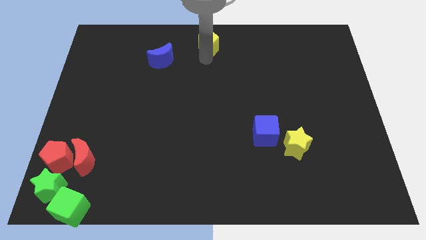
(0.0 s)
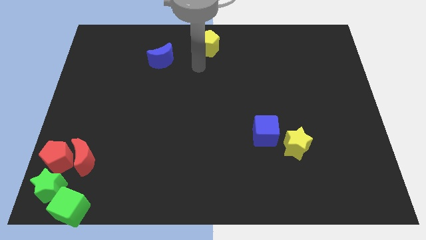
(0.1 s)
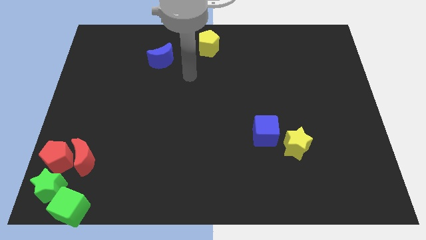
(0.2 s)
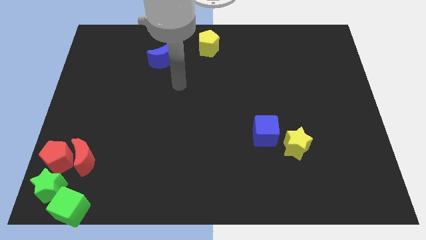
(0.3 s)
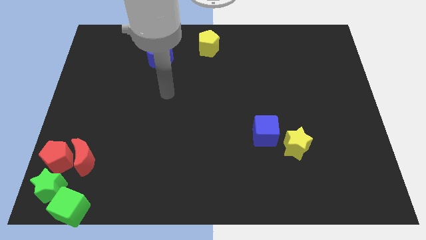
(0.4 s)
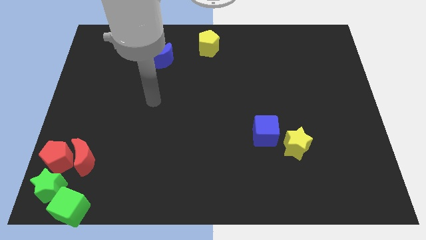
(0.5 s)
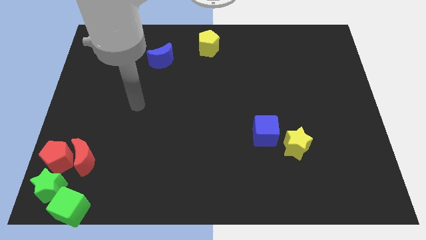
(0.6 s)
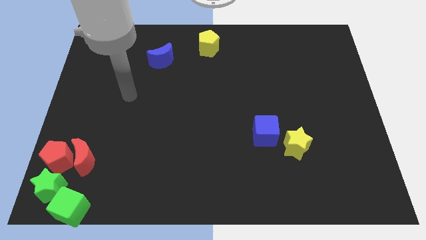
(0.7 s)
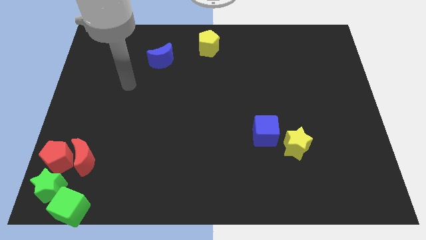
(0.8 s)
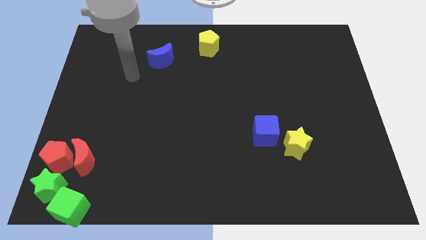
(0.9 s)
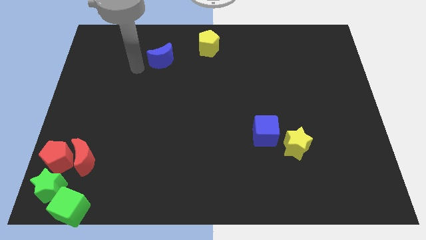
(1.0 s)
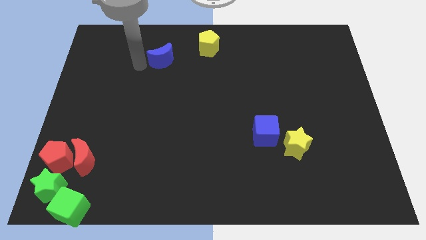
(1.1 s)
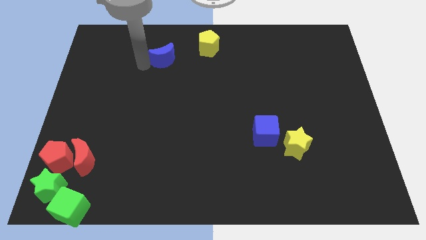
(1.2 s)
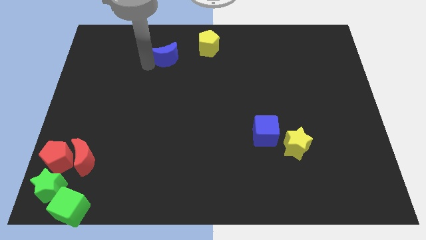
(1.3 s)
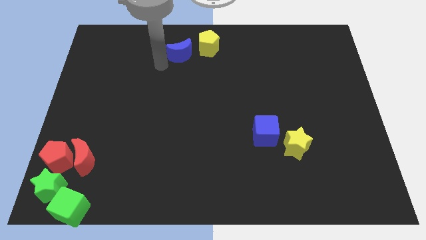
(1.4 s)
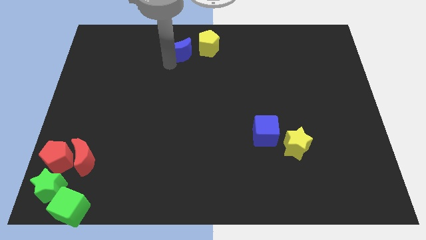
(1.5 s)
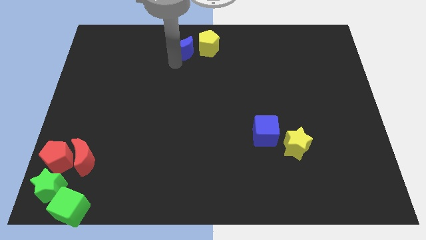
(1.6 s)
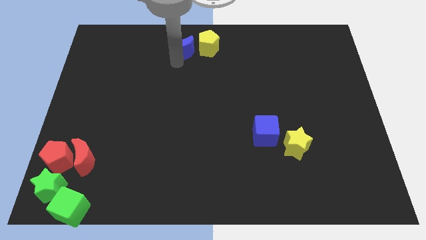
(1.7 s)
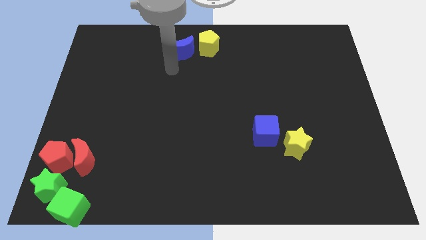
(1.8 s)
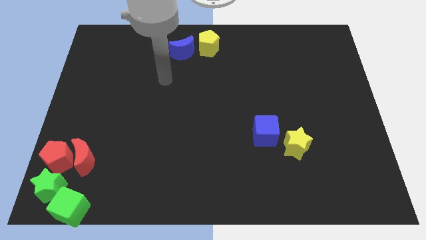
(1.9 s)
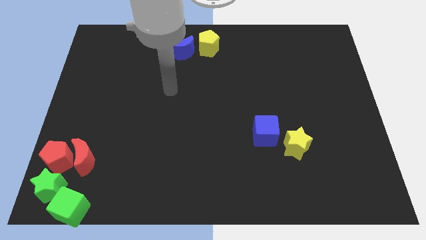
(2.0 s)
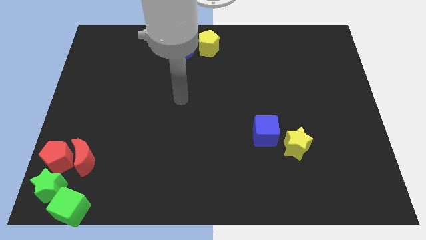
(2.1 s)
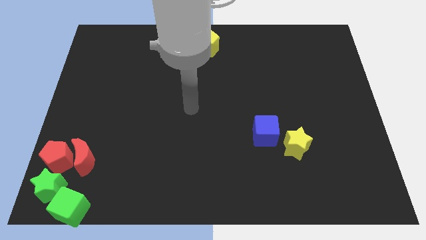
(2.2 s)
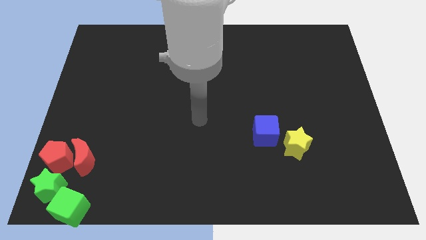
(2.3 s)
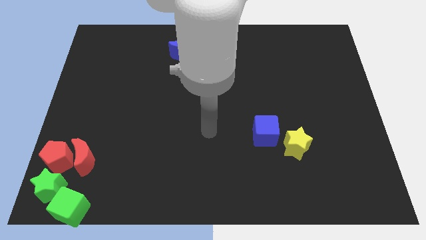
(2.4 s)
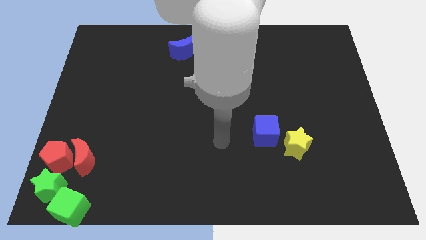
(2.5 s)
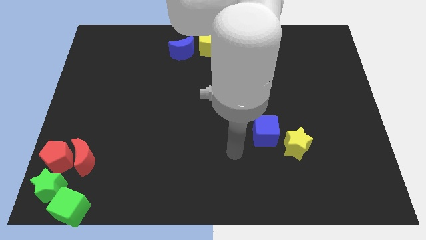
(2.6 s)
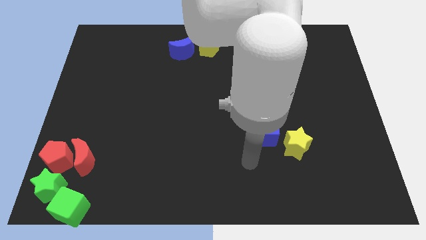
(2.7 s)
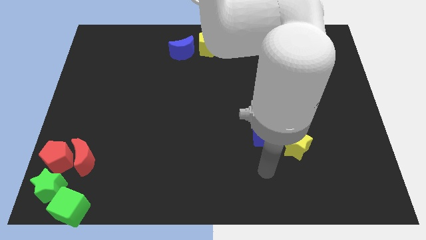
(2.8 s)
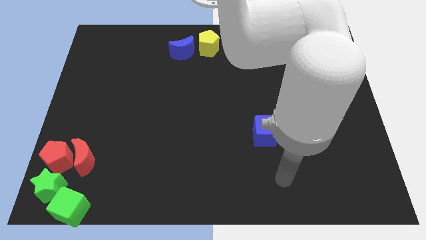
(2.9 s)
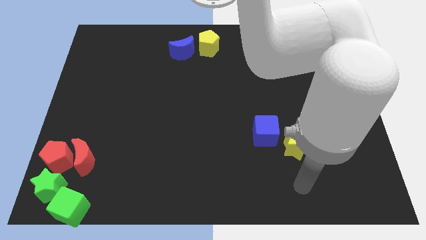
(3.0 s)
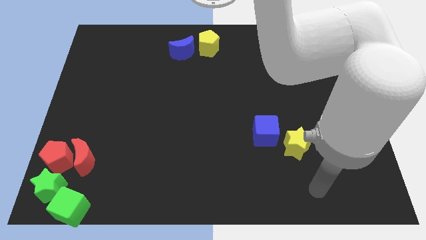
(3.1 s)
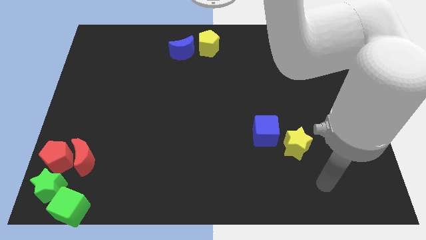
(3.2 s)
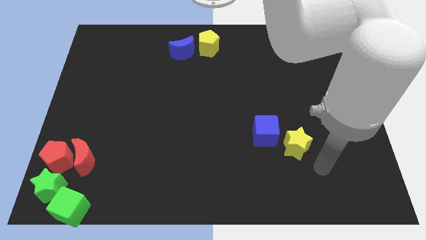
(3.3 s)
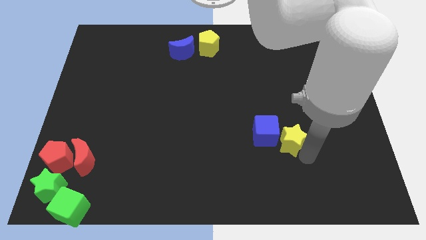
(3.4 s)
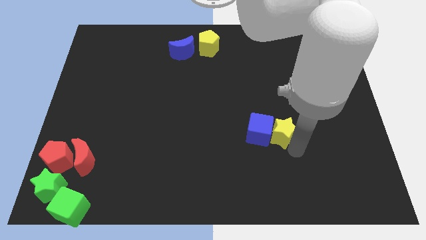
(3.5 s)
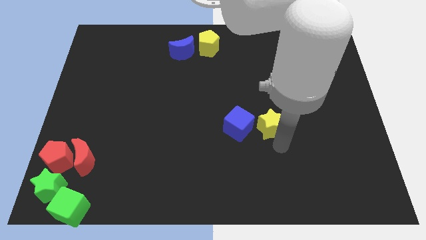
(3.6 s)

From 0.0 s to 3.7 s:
move blue moon close to yellow pentagon

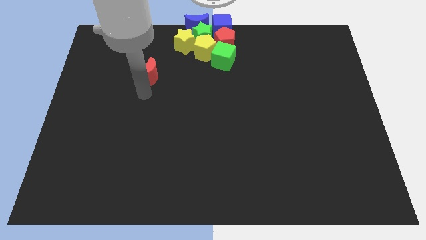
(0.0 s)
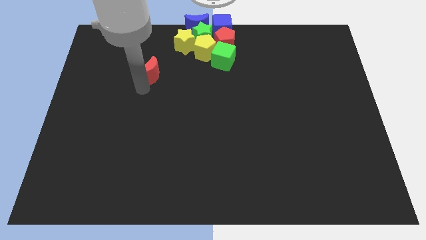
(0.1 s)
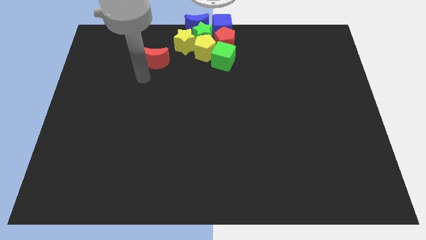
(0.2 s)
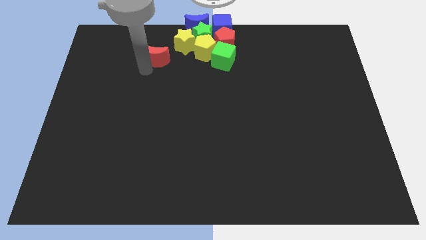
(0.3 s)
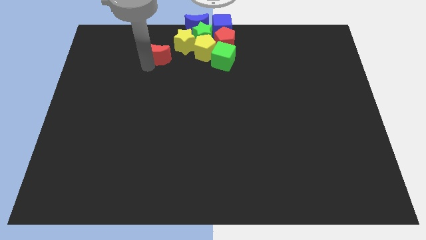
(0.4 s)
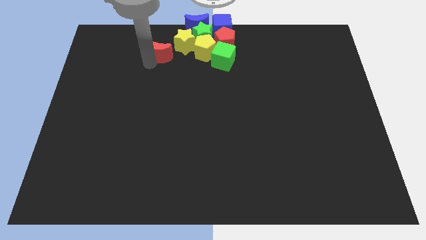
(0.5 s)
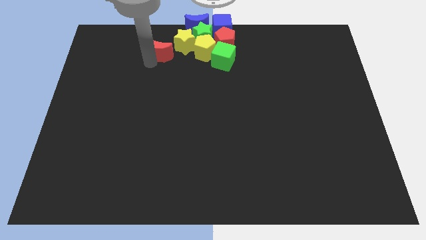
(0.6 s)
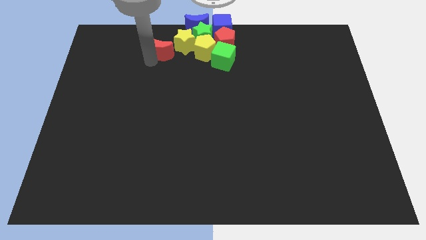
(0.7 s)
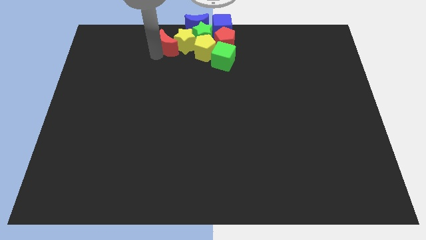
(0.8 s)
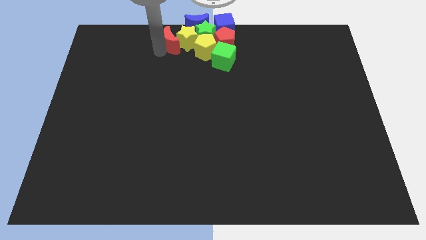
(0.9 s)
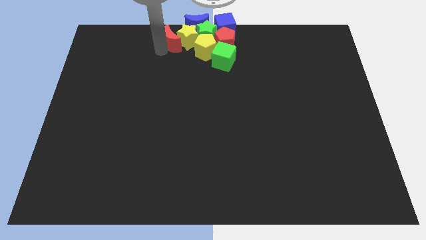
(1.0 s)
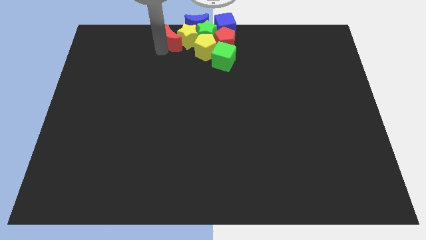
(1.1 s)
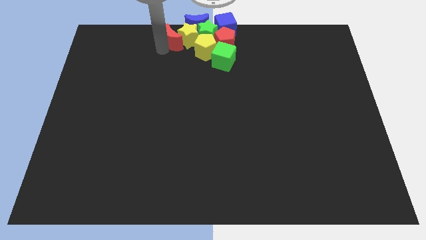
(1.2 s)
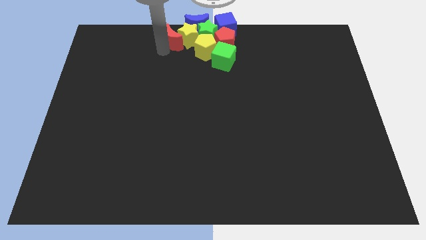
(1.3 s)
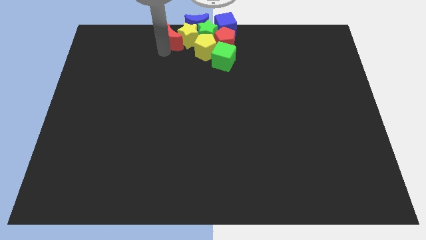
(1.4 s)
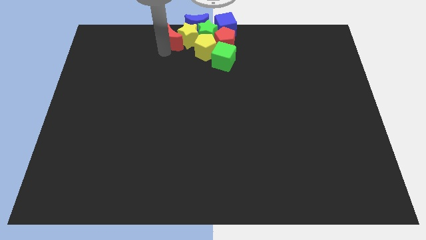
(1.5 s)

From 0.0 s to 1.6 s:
move the red moon into the yellow star

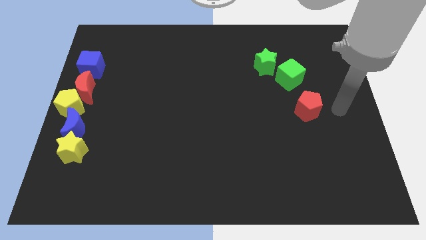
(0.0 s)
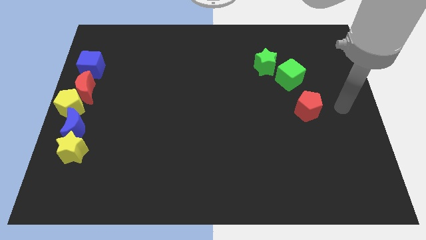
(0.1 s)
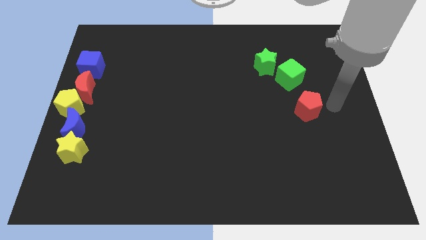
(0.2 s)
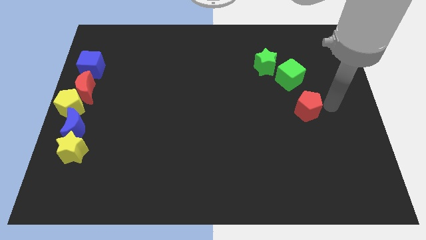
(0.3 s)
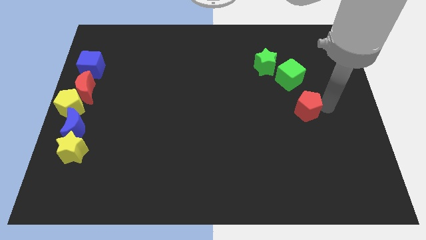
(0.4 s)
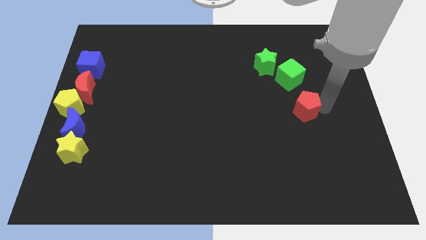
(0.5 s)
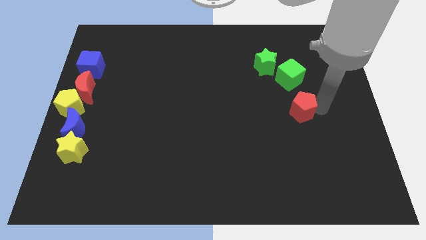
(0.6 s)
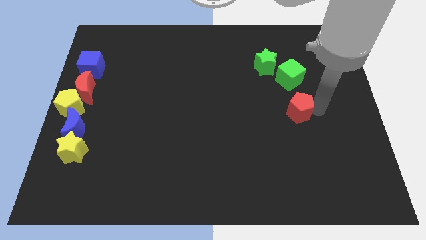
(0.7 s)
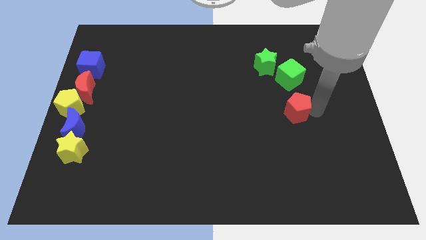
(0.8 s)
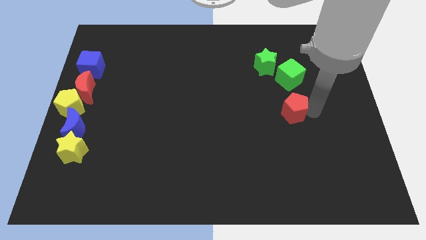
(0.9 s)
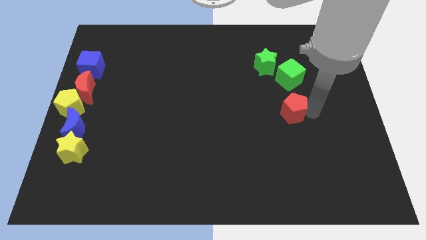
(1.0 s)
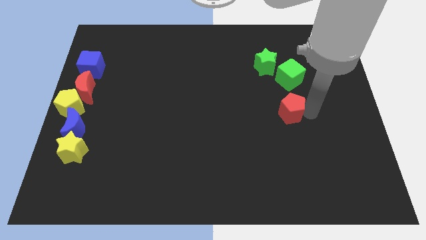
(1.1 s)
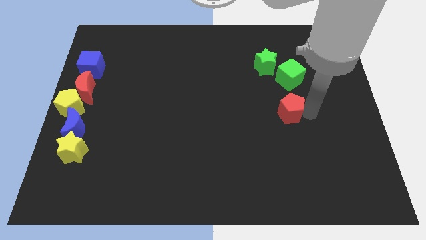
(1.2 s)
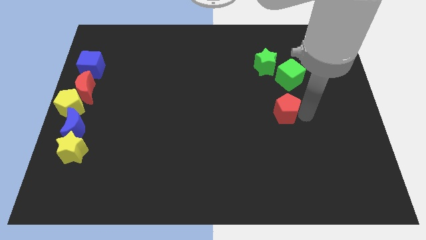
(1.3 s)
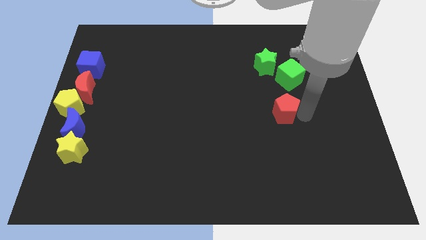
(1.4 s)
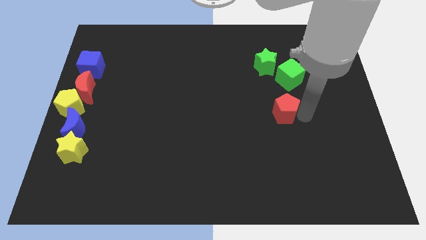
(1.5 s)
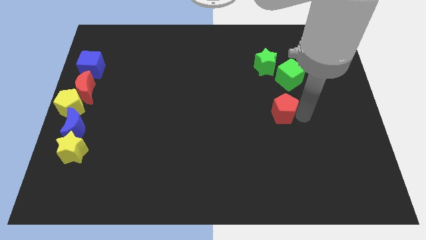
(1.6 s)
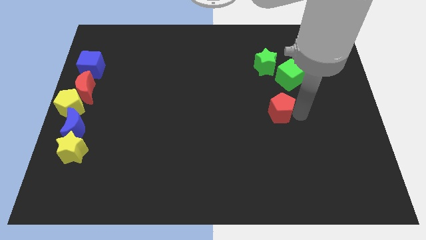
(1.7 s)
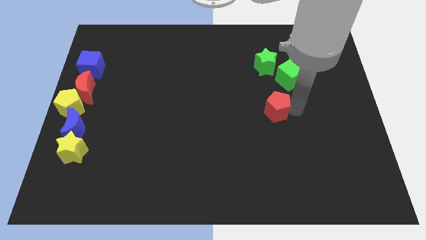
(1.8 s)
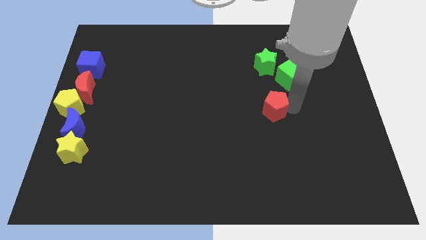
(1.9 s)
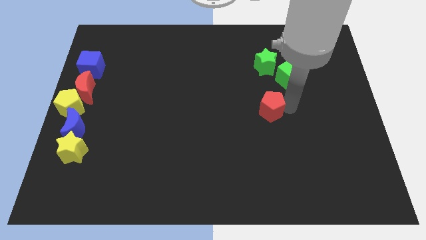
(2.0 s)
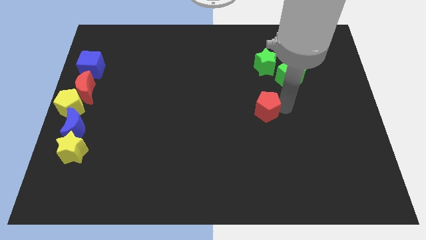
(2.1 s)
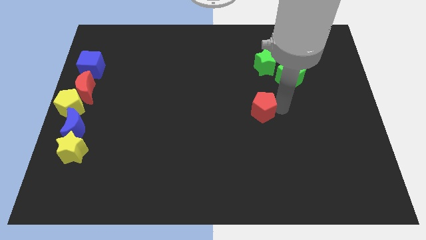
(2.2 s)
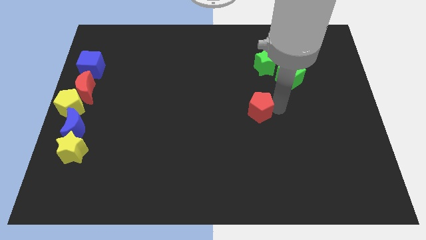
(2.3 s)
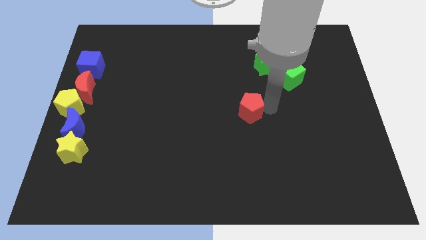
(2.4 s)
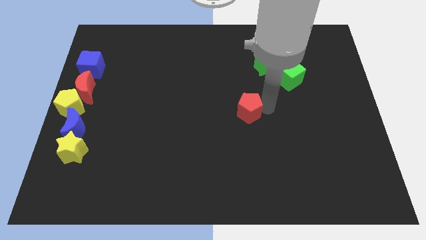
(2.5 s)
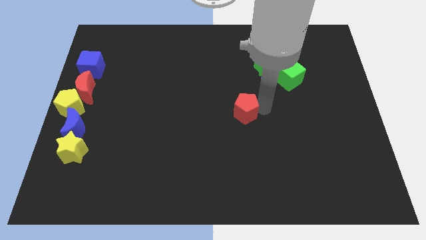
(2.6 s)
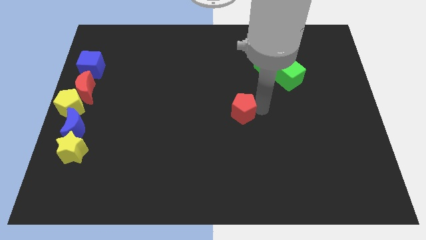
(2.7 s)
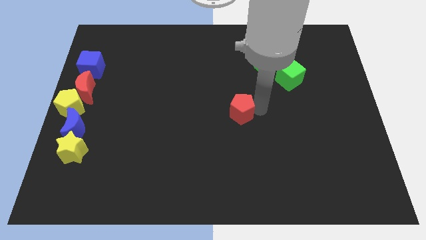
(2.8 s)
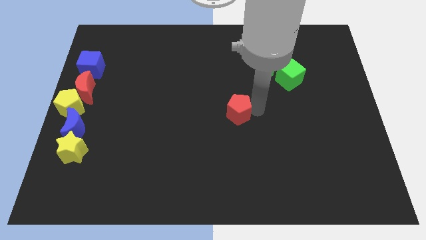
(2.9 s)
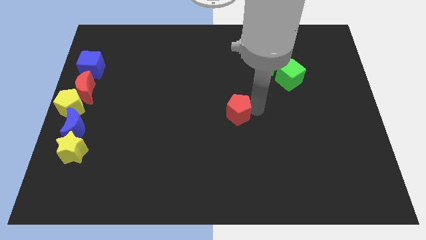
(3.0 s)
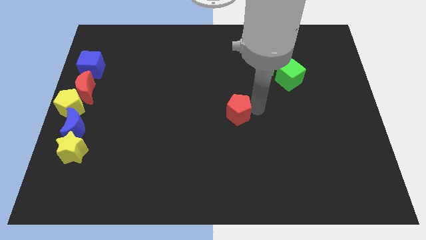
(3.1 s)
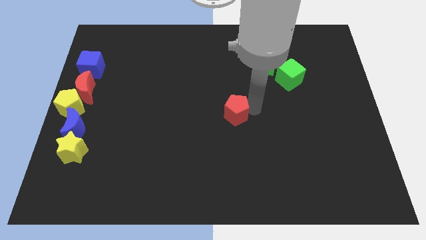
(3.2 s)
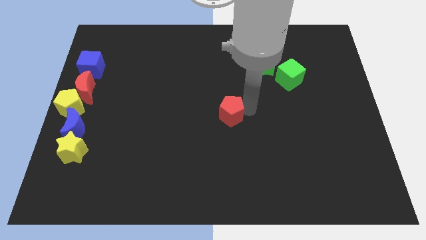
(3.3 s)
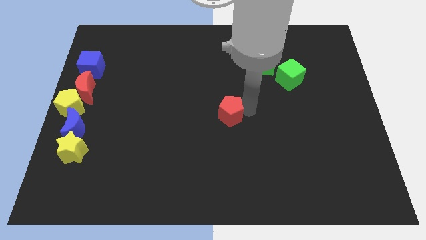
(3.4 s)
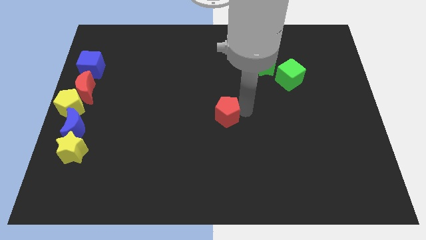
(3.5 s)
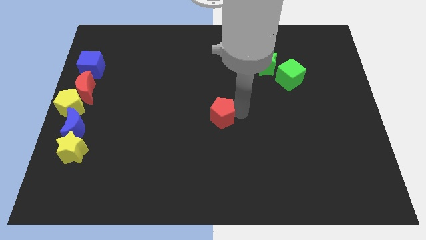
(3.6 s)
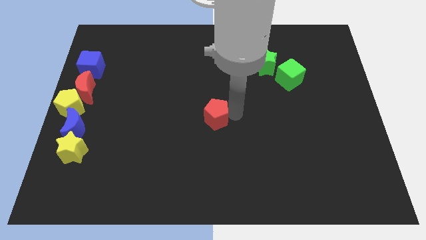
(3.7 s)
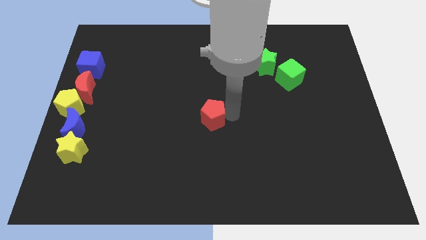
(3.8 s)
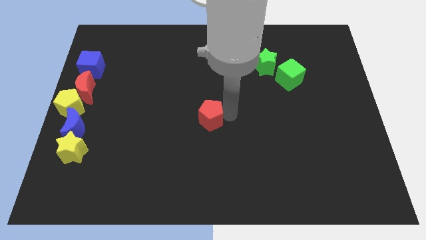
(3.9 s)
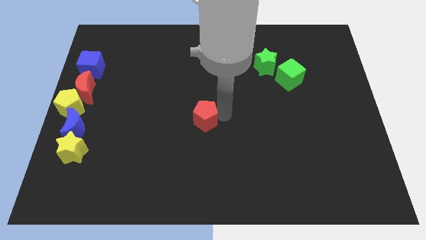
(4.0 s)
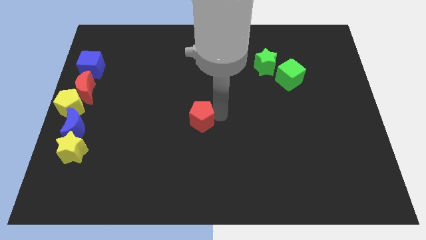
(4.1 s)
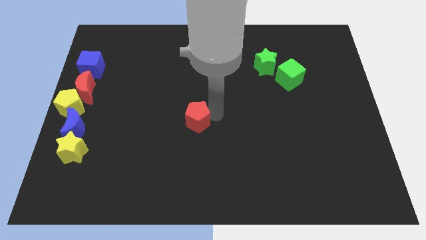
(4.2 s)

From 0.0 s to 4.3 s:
move the red pentagon to the center of the board
